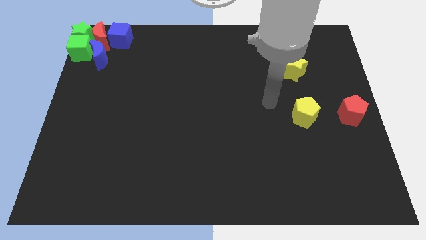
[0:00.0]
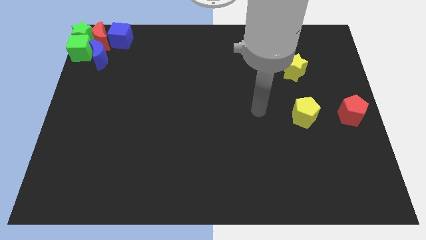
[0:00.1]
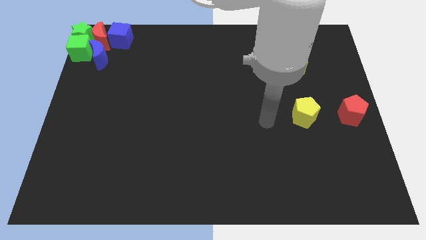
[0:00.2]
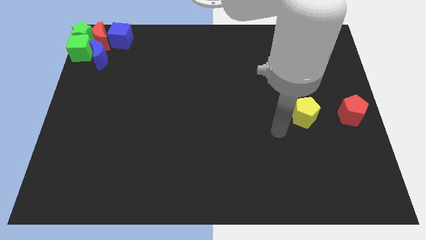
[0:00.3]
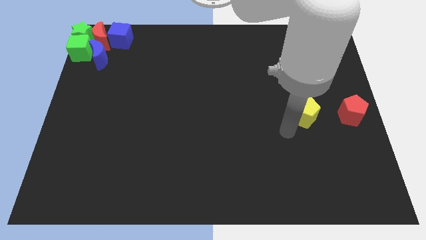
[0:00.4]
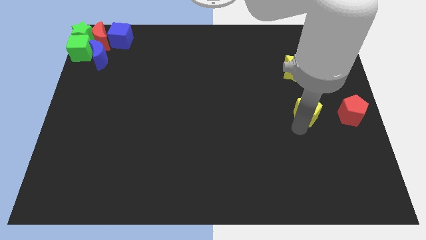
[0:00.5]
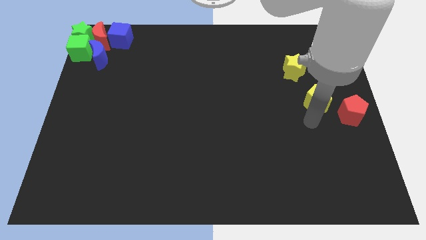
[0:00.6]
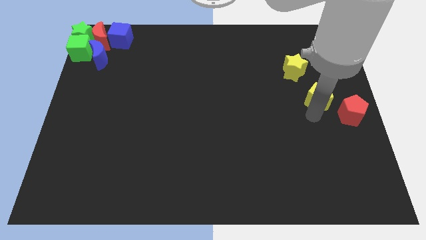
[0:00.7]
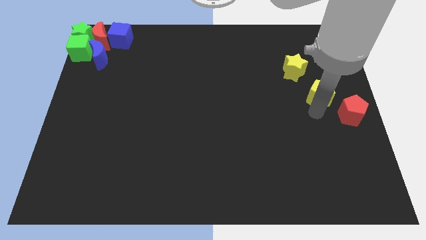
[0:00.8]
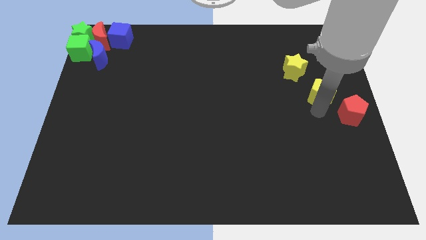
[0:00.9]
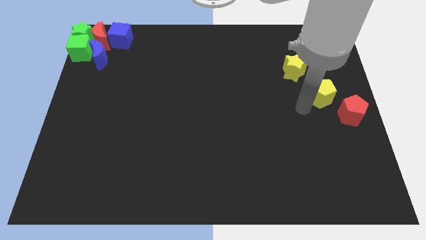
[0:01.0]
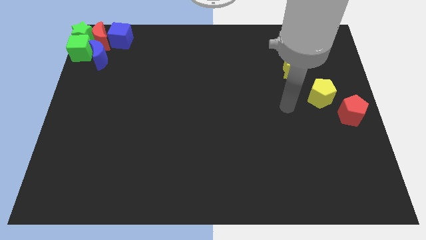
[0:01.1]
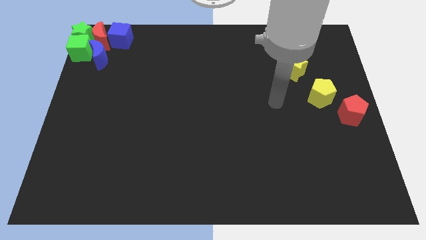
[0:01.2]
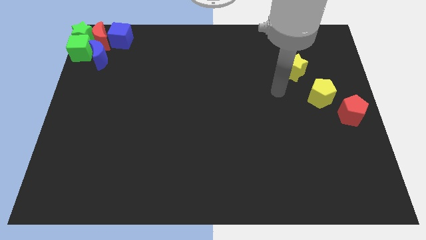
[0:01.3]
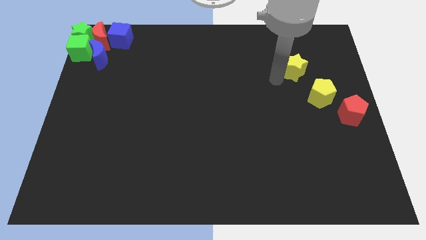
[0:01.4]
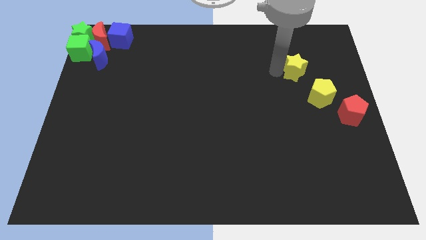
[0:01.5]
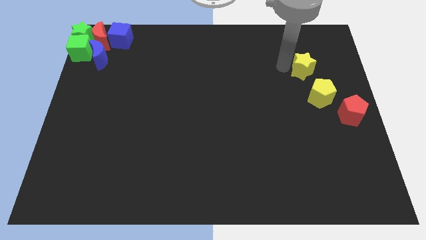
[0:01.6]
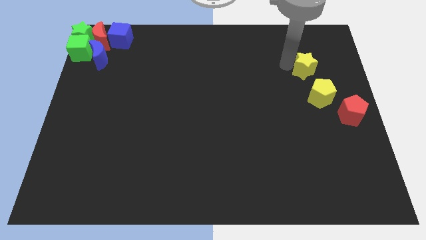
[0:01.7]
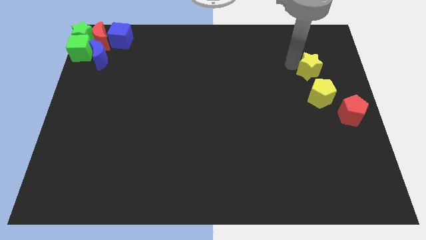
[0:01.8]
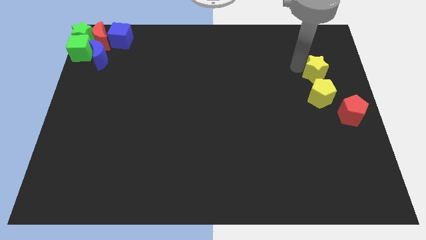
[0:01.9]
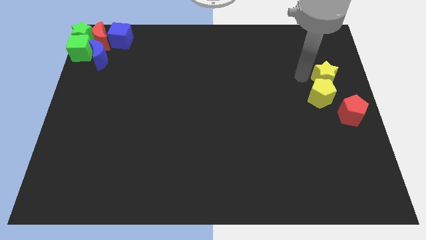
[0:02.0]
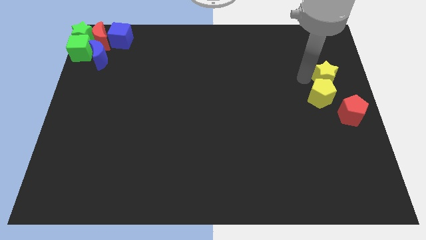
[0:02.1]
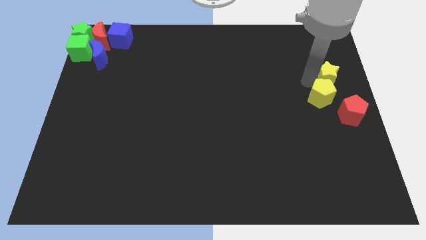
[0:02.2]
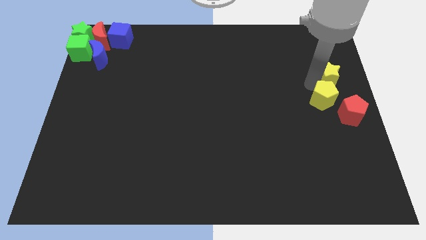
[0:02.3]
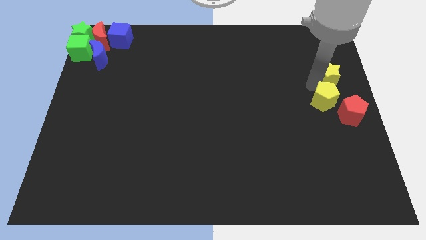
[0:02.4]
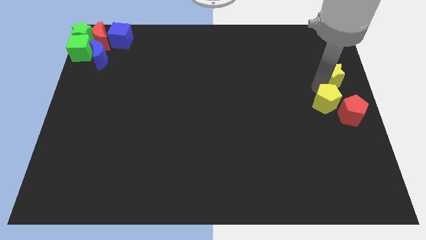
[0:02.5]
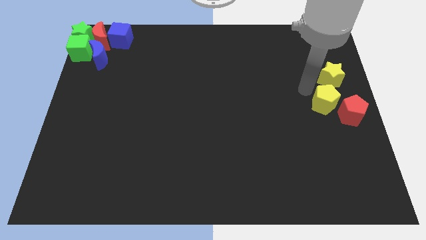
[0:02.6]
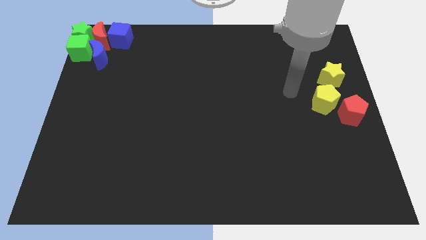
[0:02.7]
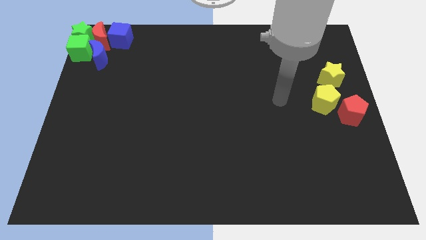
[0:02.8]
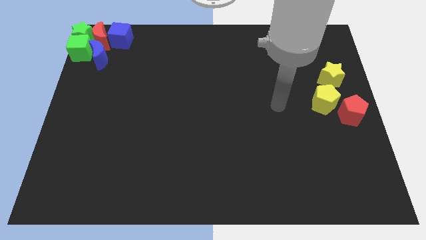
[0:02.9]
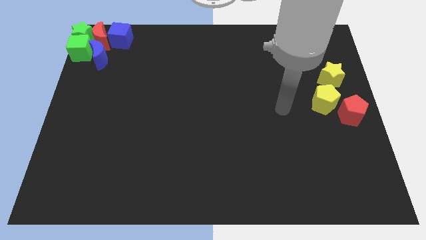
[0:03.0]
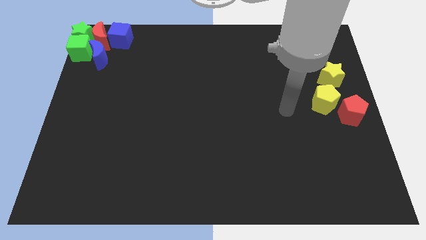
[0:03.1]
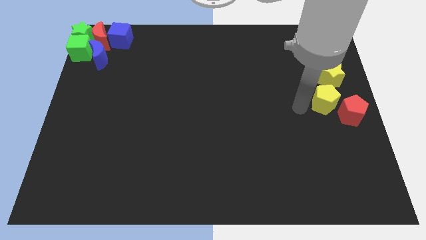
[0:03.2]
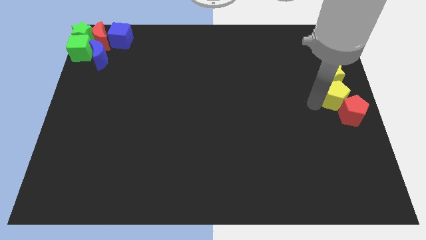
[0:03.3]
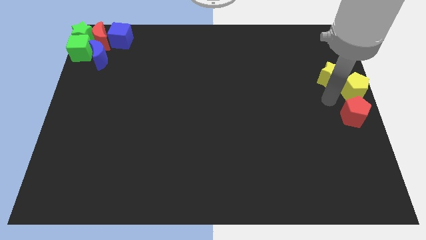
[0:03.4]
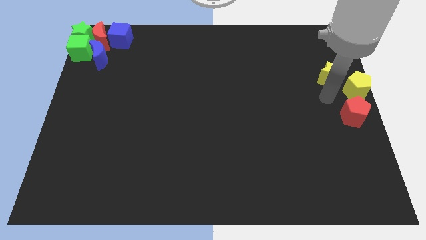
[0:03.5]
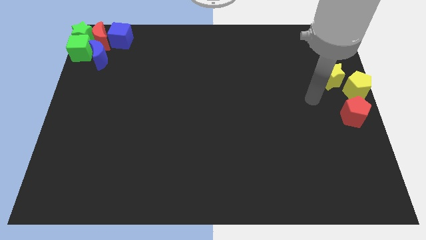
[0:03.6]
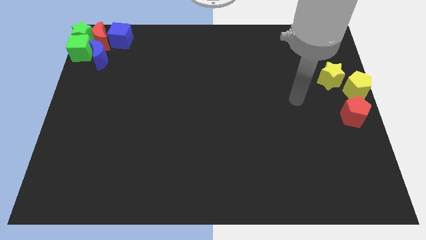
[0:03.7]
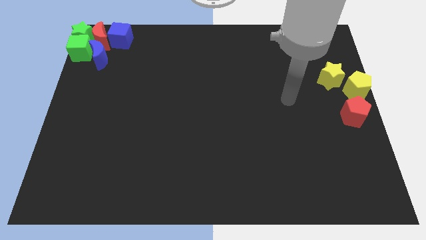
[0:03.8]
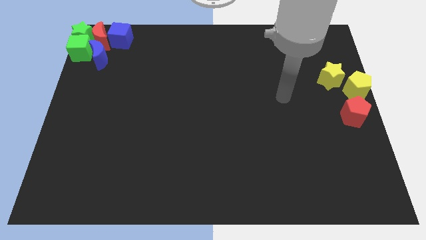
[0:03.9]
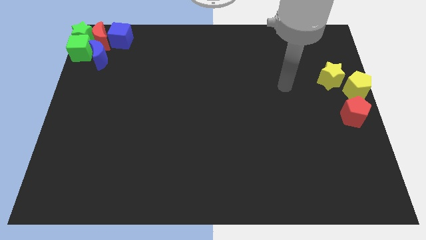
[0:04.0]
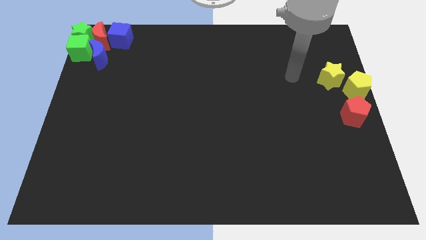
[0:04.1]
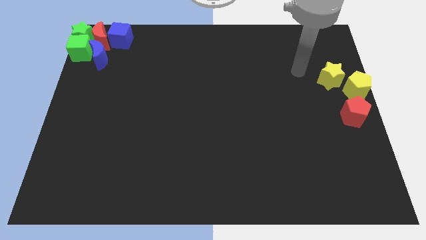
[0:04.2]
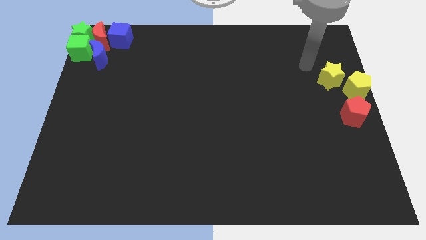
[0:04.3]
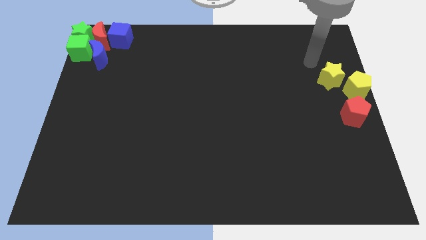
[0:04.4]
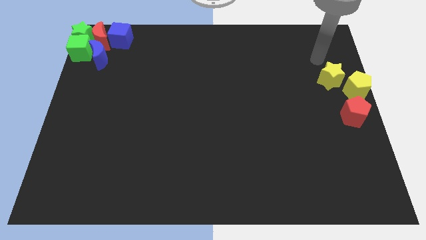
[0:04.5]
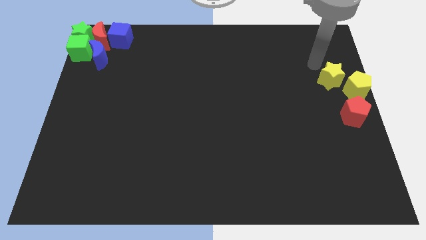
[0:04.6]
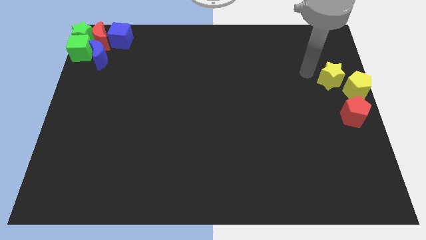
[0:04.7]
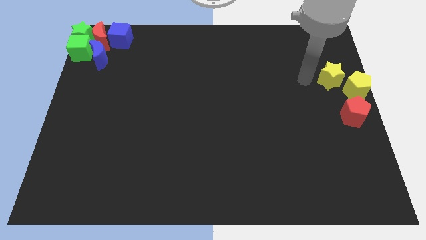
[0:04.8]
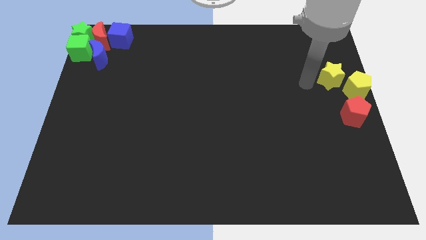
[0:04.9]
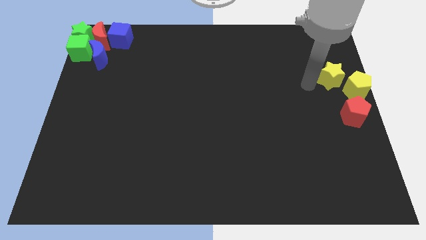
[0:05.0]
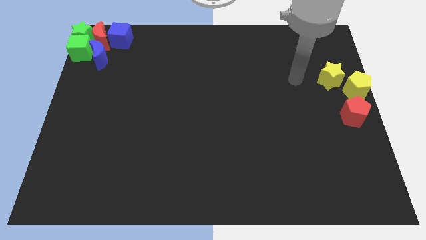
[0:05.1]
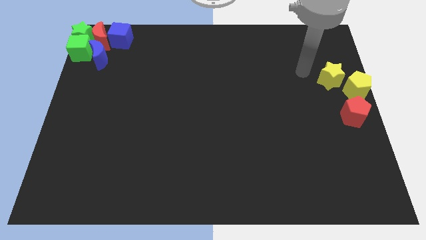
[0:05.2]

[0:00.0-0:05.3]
move the yellow star and yellow pentagon towards the top of the red pentagon

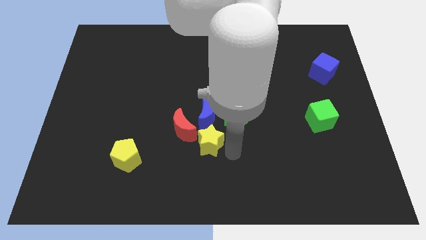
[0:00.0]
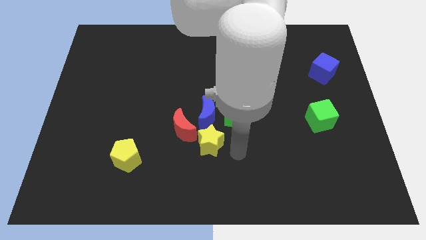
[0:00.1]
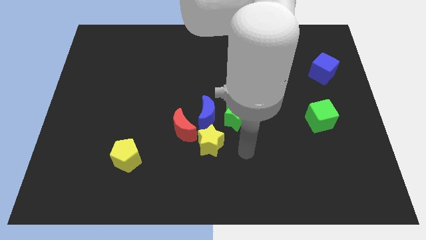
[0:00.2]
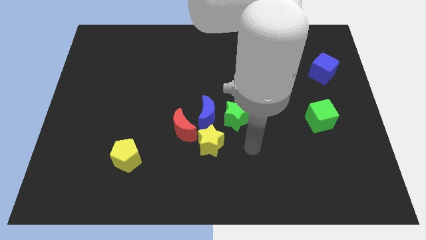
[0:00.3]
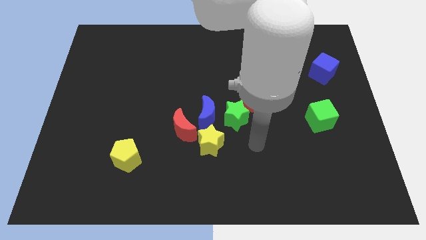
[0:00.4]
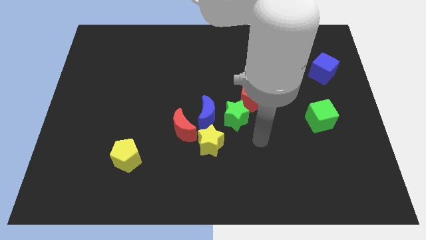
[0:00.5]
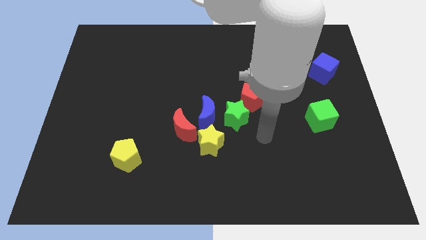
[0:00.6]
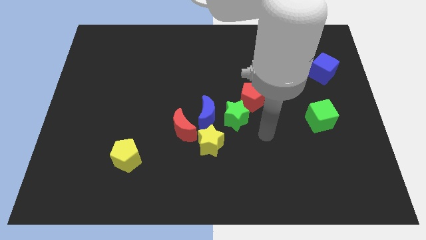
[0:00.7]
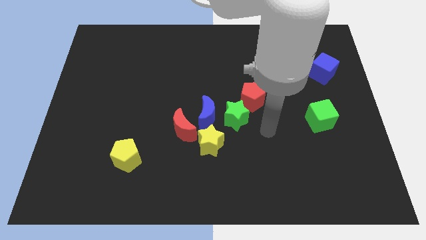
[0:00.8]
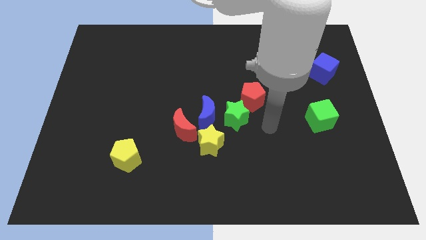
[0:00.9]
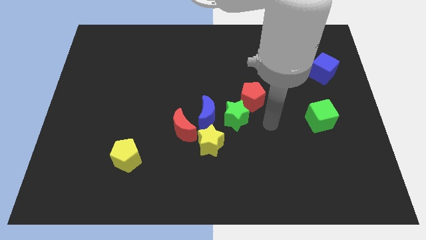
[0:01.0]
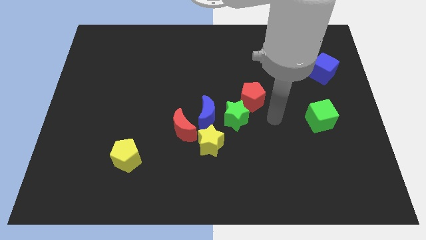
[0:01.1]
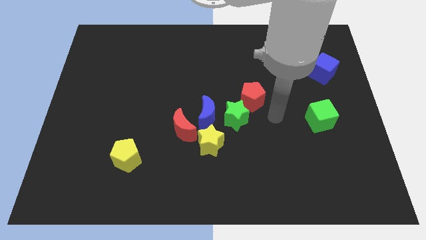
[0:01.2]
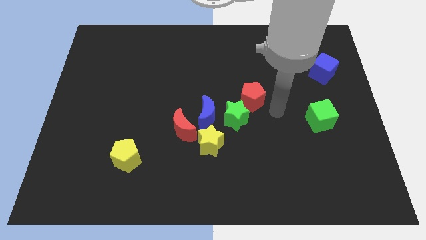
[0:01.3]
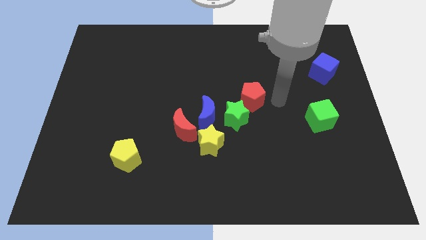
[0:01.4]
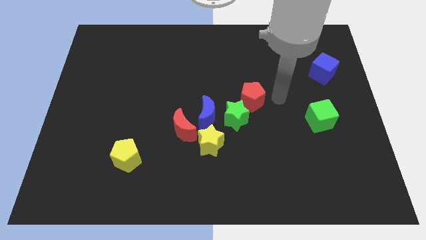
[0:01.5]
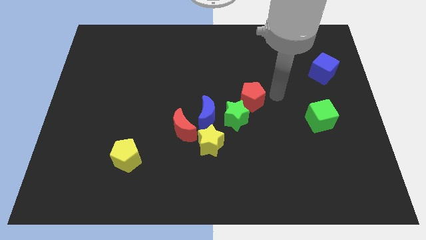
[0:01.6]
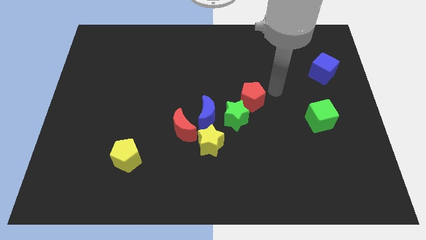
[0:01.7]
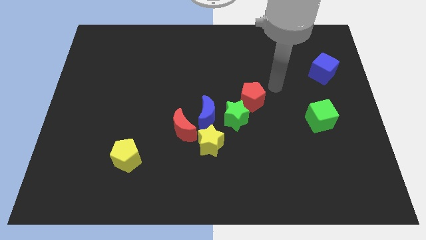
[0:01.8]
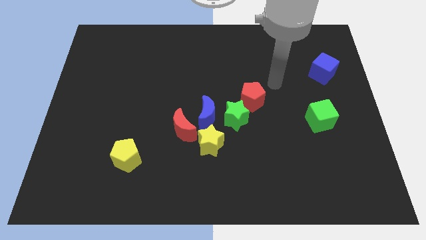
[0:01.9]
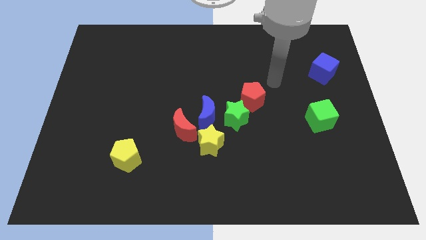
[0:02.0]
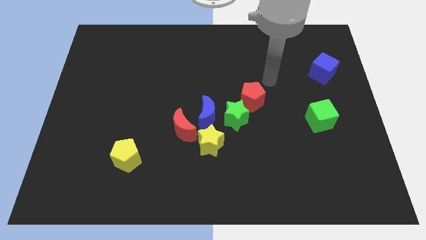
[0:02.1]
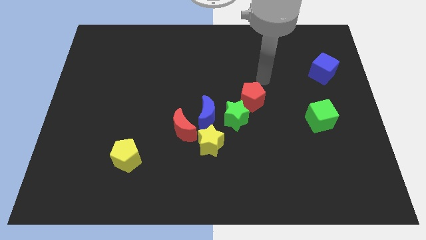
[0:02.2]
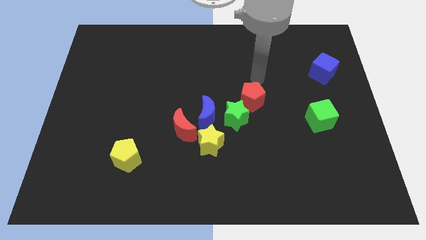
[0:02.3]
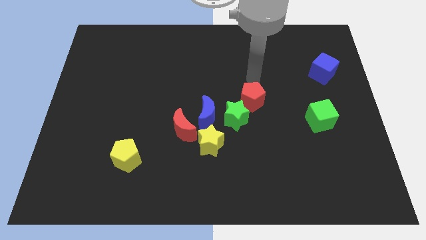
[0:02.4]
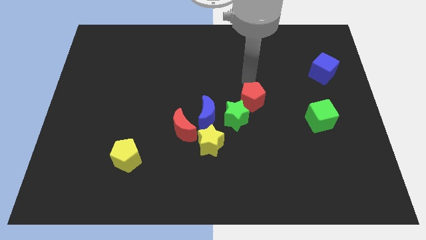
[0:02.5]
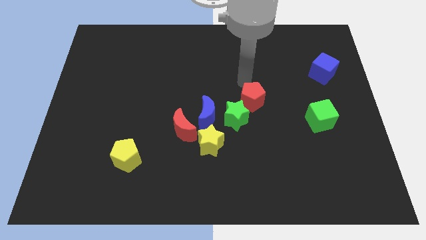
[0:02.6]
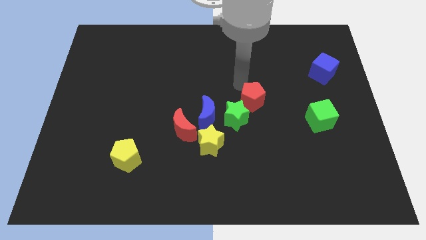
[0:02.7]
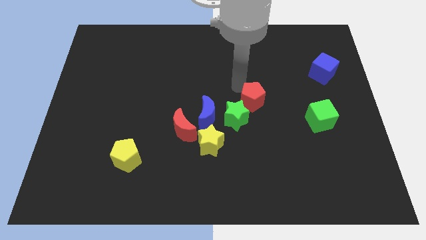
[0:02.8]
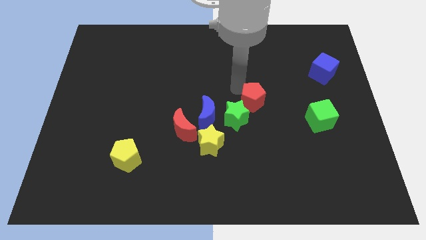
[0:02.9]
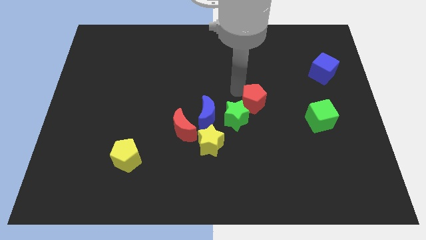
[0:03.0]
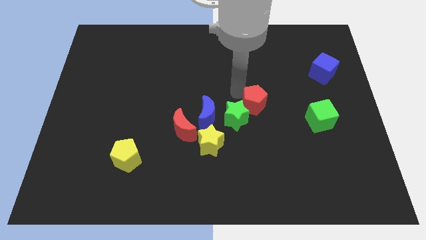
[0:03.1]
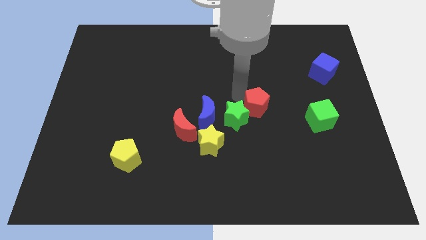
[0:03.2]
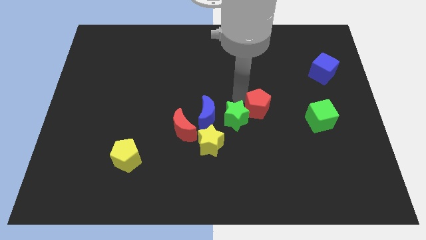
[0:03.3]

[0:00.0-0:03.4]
move the arm around the red pentagon of the board

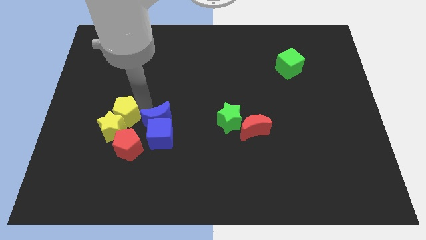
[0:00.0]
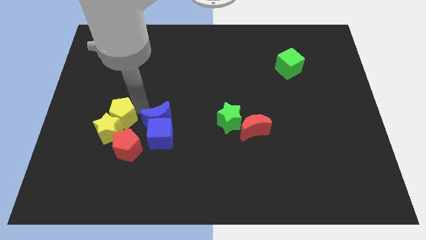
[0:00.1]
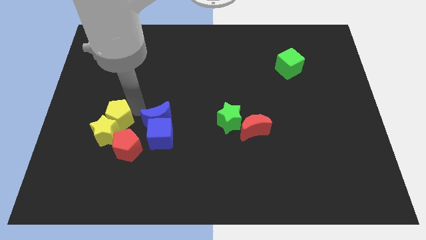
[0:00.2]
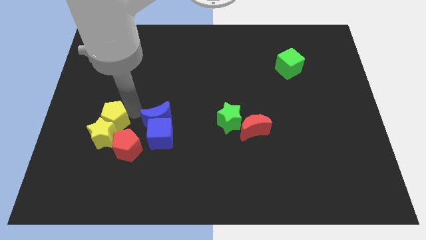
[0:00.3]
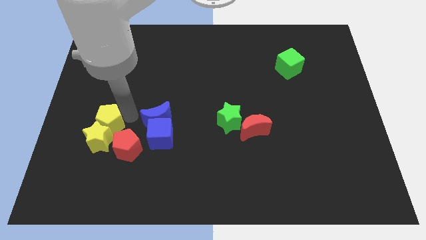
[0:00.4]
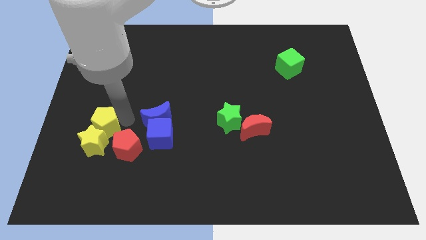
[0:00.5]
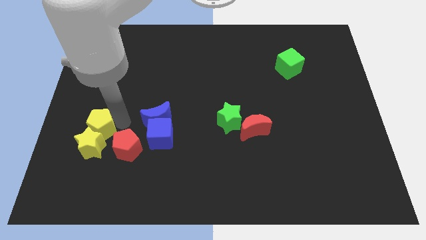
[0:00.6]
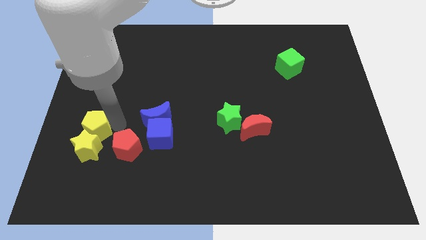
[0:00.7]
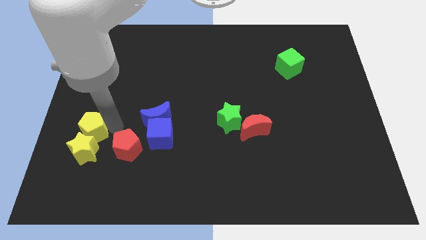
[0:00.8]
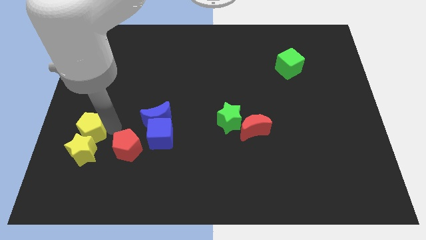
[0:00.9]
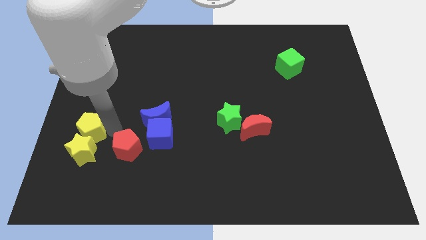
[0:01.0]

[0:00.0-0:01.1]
push the yellow pentagon and yellow star slightly towards the bottom left of the board
